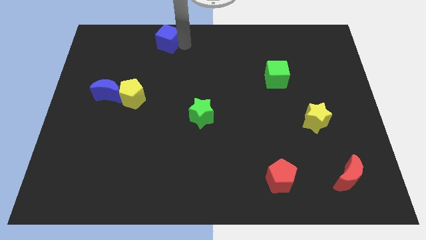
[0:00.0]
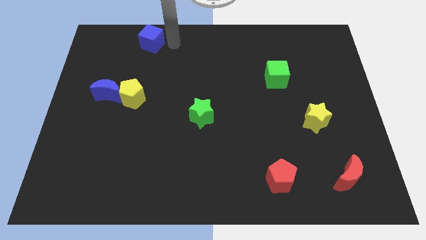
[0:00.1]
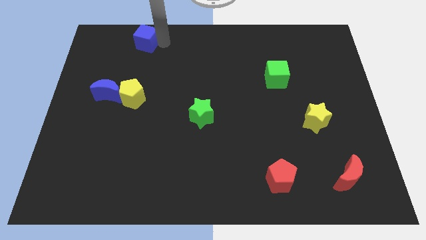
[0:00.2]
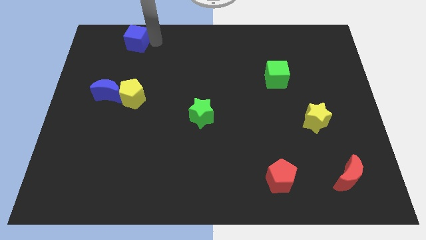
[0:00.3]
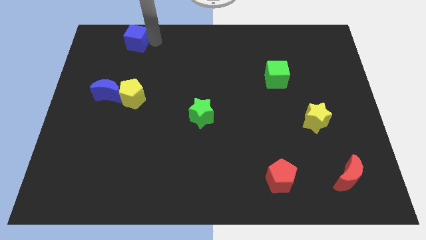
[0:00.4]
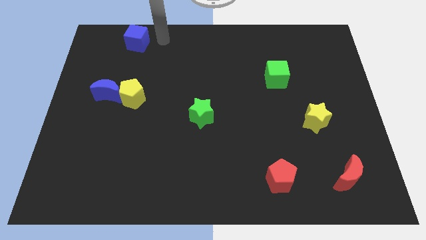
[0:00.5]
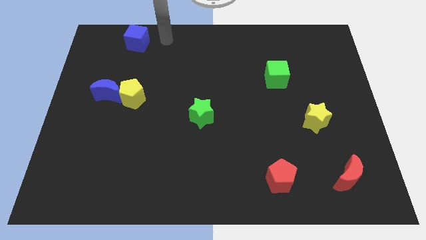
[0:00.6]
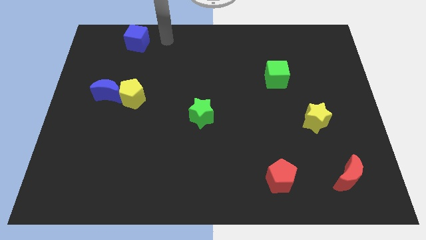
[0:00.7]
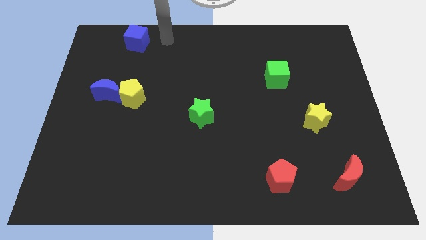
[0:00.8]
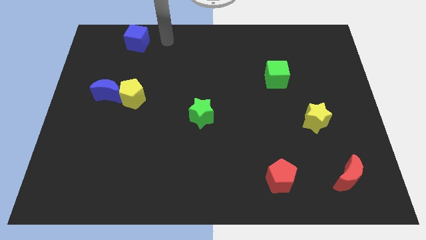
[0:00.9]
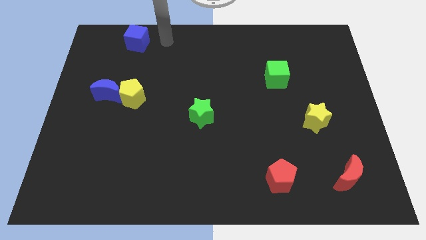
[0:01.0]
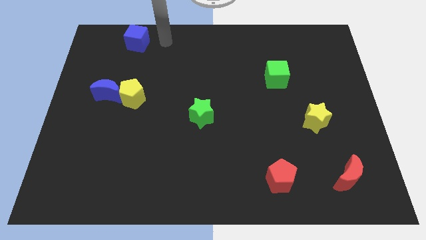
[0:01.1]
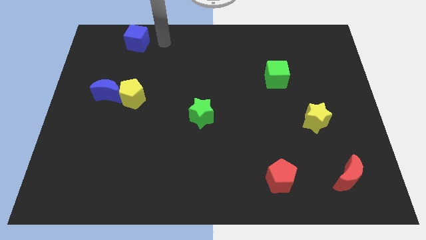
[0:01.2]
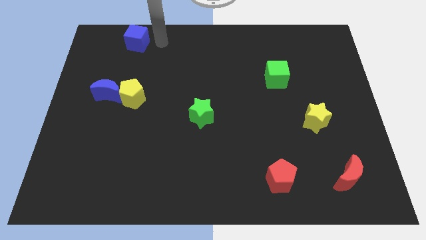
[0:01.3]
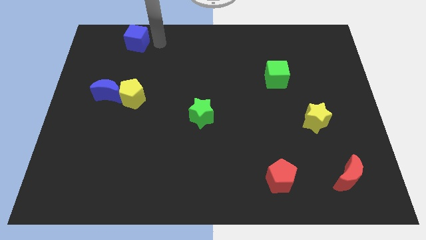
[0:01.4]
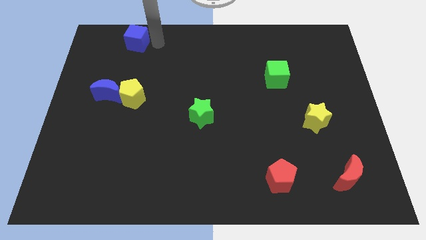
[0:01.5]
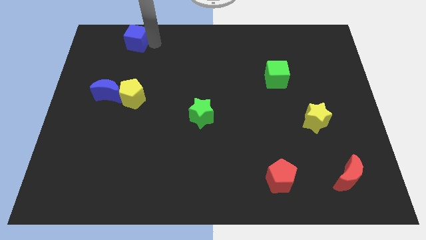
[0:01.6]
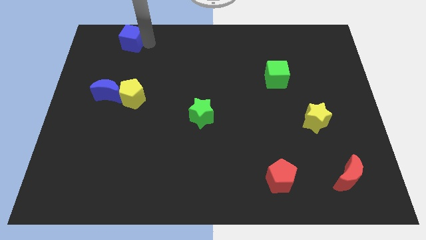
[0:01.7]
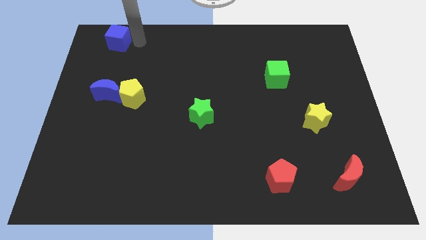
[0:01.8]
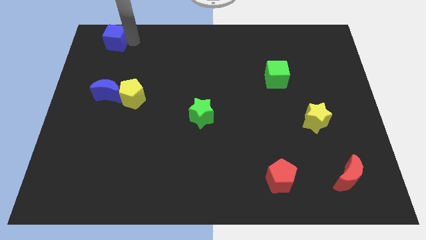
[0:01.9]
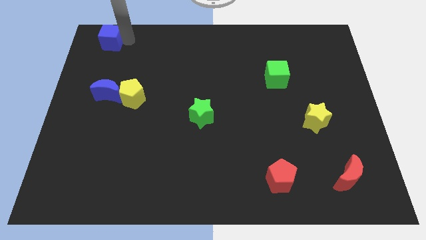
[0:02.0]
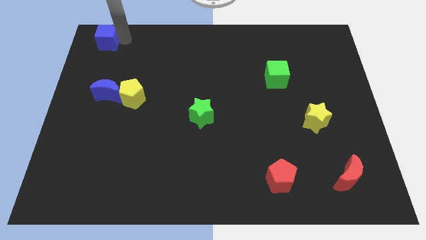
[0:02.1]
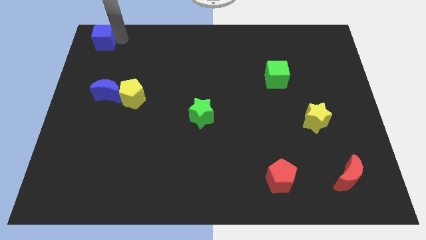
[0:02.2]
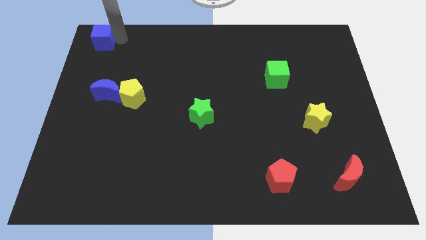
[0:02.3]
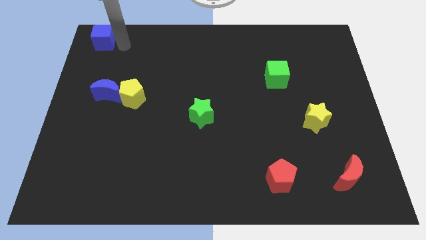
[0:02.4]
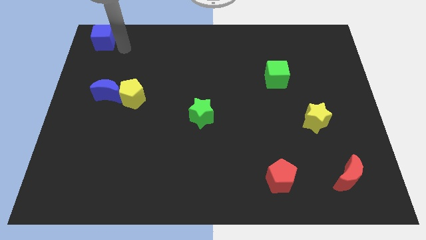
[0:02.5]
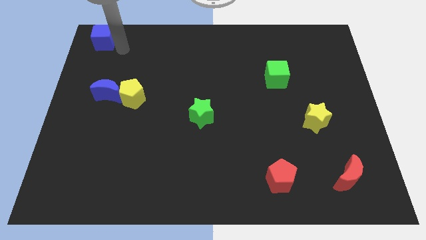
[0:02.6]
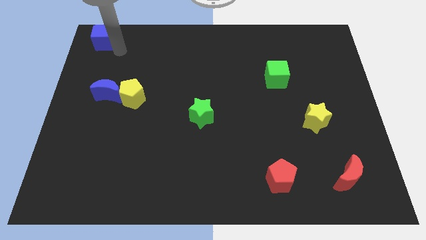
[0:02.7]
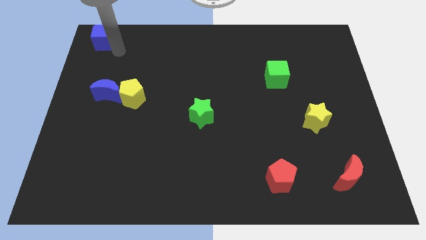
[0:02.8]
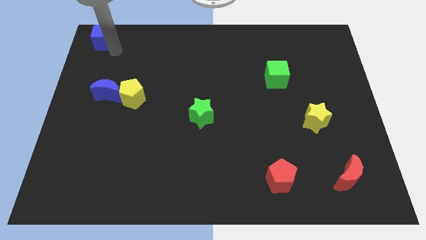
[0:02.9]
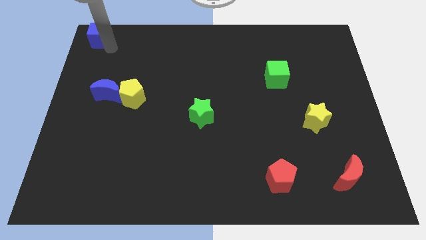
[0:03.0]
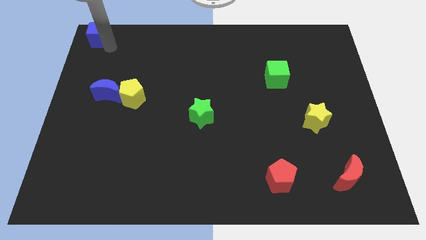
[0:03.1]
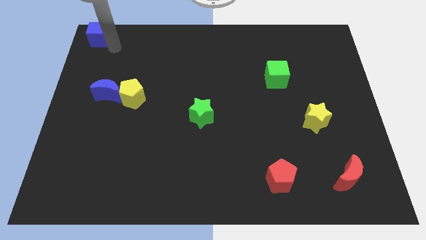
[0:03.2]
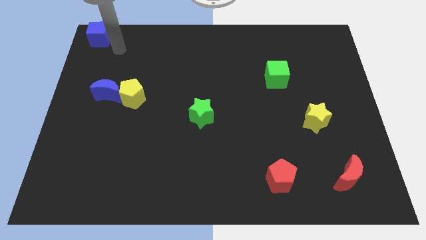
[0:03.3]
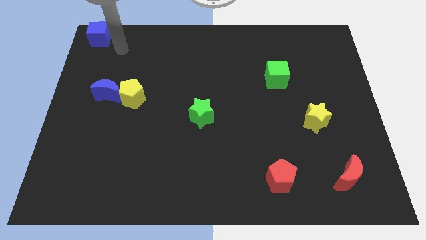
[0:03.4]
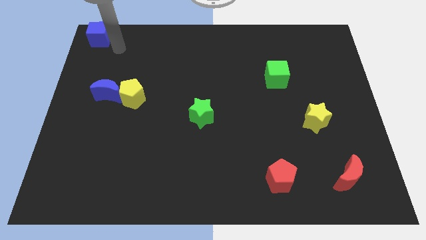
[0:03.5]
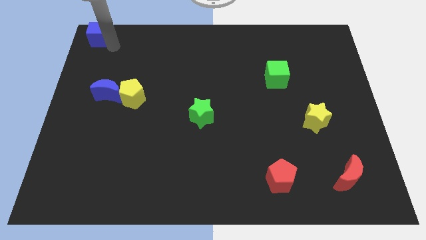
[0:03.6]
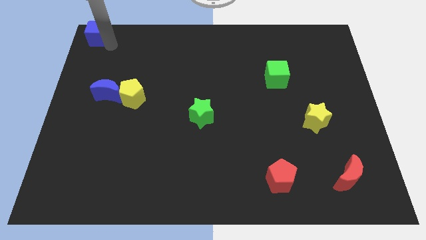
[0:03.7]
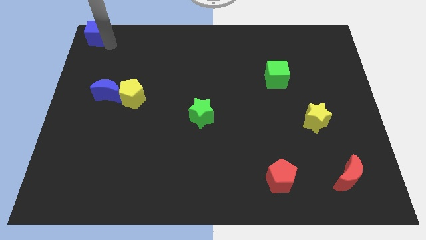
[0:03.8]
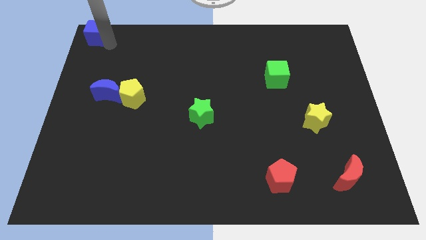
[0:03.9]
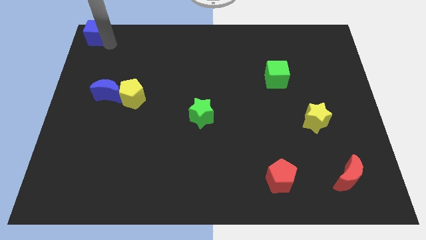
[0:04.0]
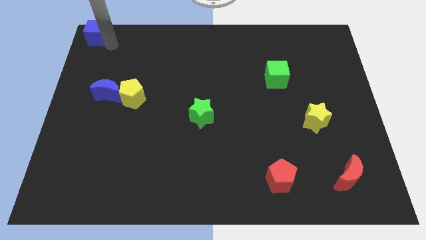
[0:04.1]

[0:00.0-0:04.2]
move the blue cube to the top left corner of the board

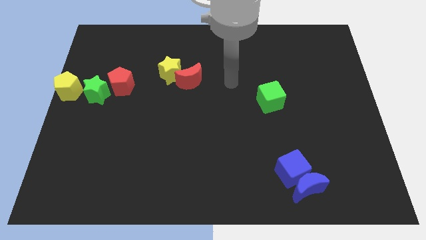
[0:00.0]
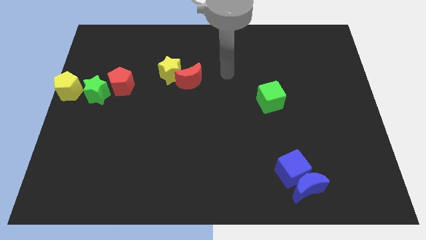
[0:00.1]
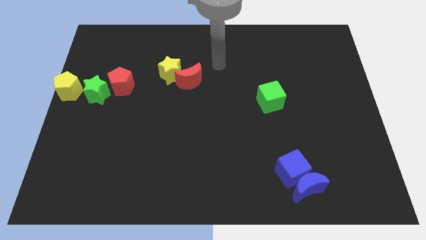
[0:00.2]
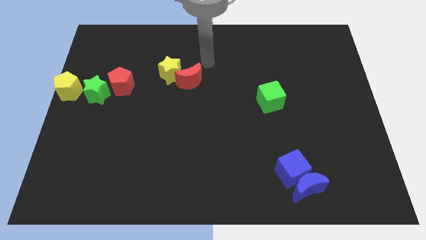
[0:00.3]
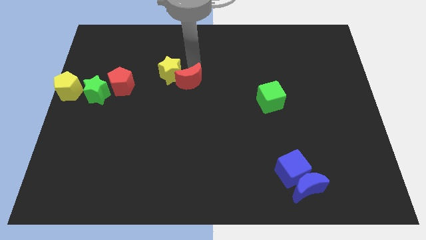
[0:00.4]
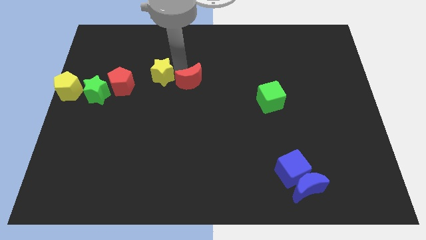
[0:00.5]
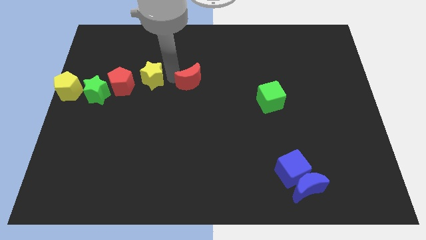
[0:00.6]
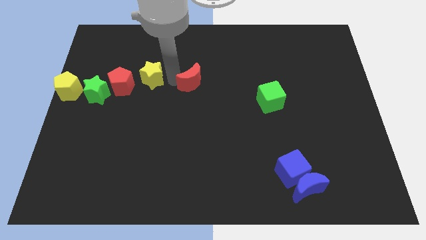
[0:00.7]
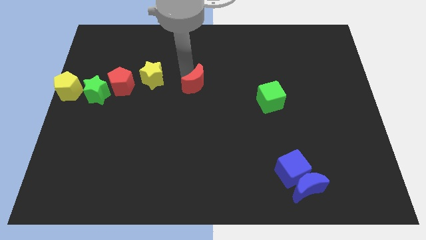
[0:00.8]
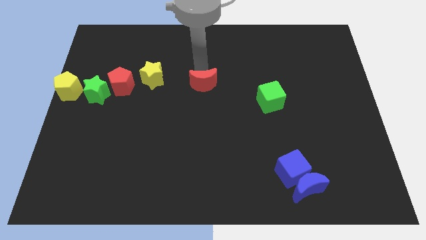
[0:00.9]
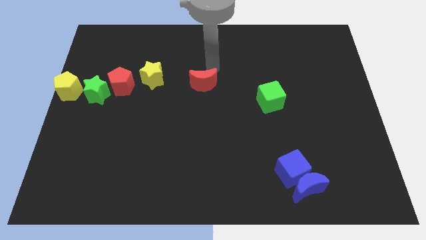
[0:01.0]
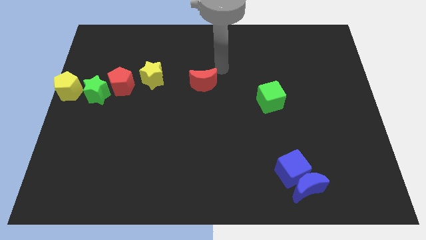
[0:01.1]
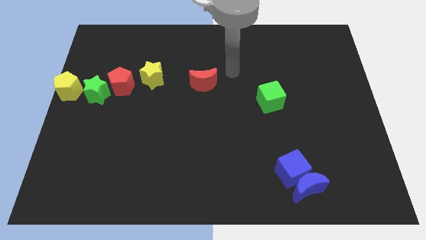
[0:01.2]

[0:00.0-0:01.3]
separate the red crescent and yellow star

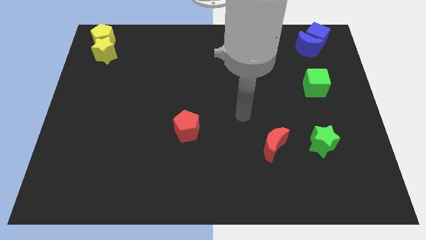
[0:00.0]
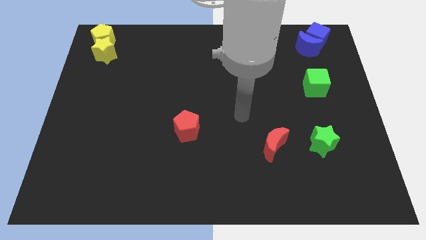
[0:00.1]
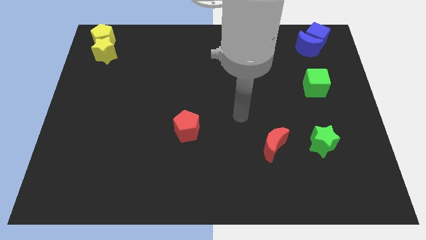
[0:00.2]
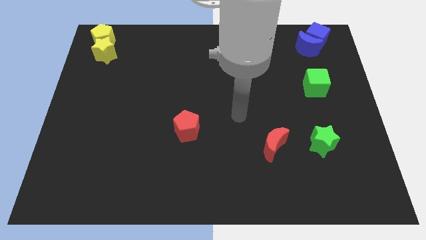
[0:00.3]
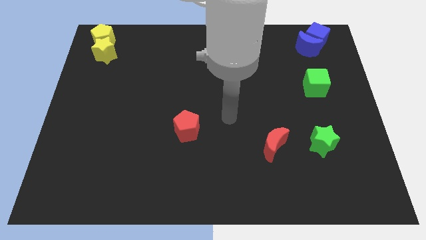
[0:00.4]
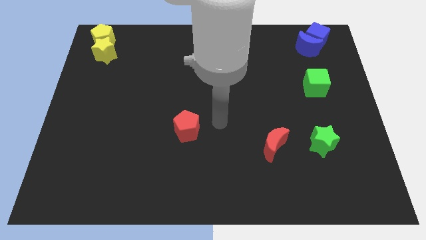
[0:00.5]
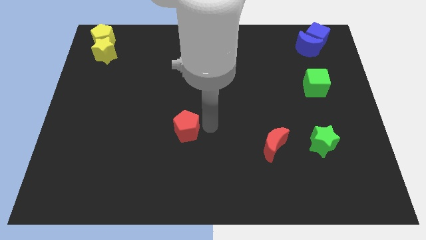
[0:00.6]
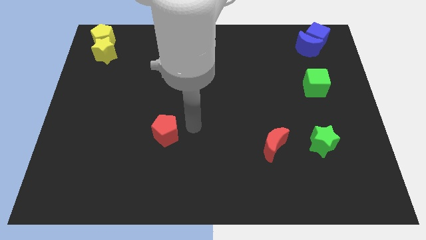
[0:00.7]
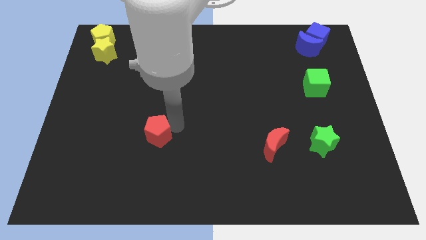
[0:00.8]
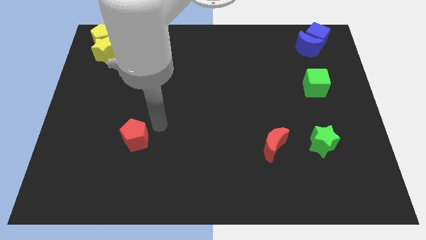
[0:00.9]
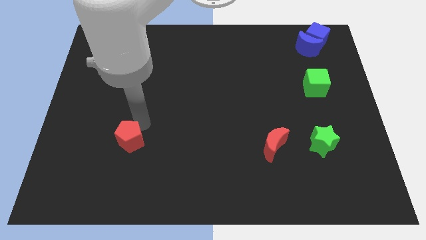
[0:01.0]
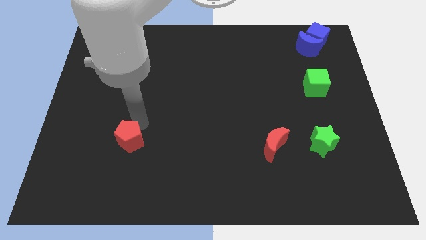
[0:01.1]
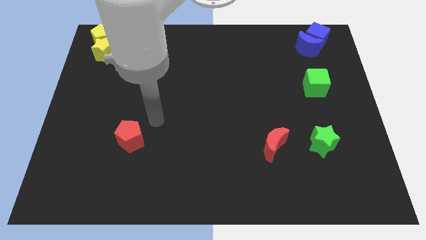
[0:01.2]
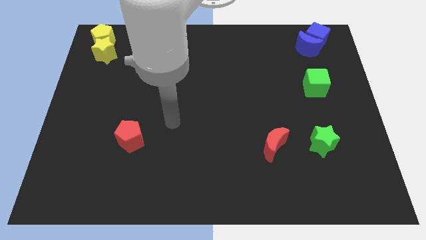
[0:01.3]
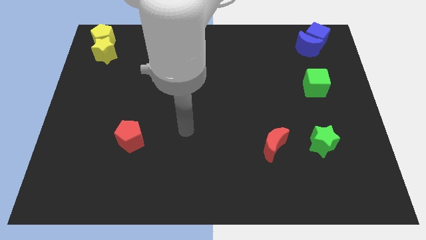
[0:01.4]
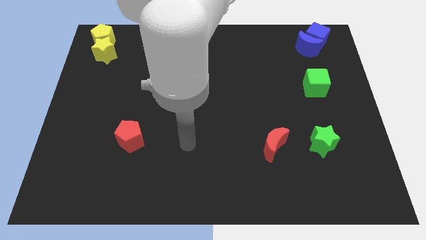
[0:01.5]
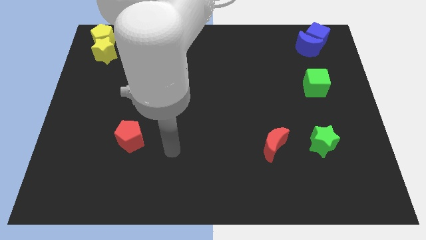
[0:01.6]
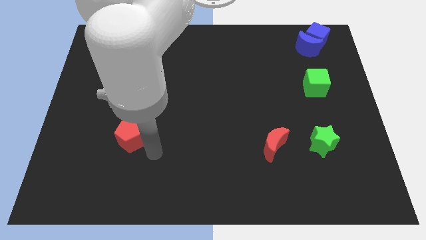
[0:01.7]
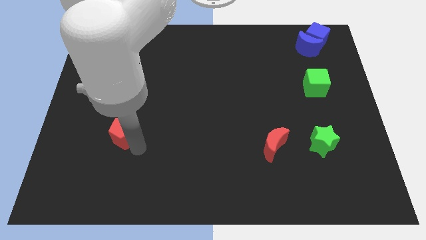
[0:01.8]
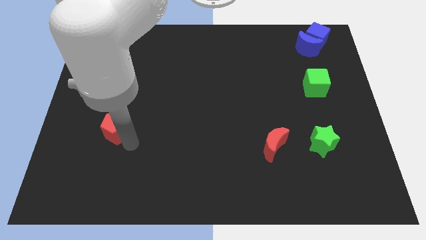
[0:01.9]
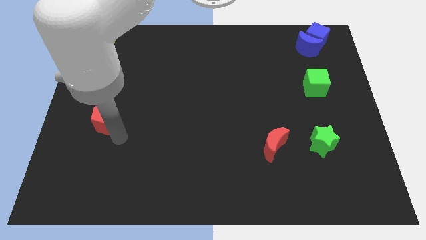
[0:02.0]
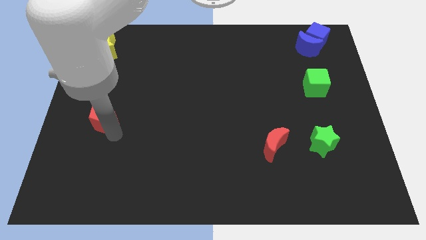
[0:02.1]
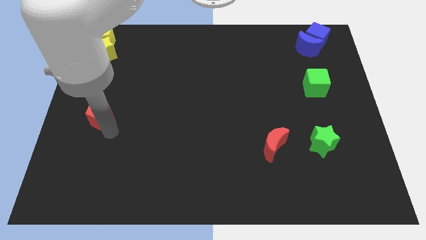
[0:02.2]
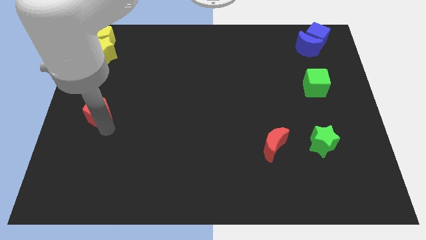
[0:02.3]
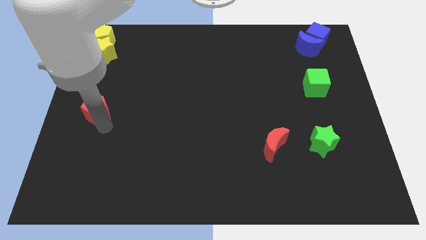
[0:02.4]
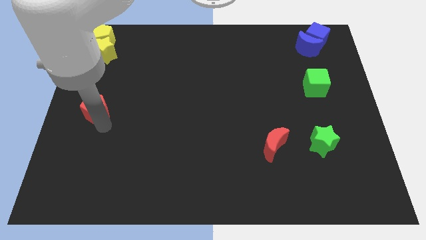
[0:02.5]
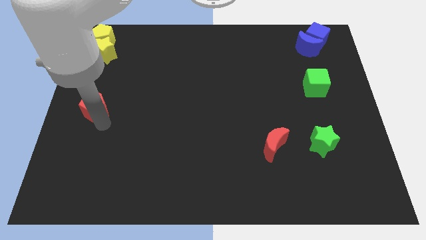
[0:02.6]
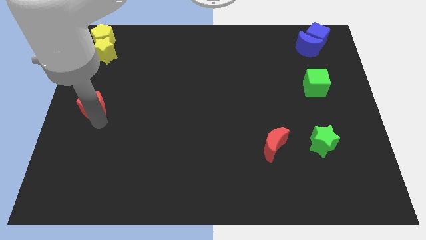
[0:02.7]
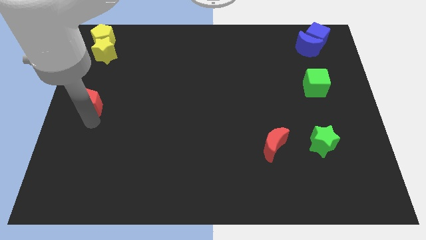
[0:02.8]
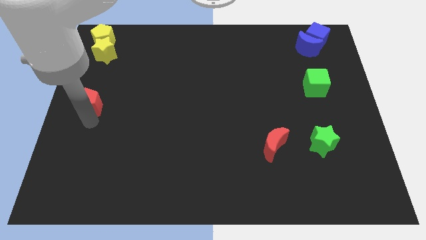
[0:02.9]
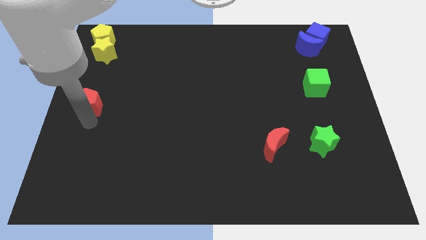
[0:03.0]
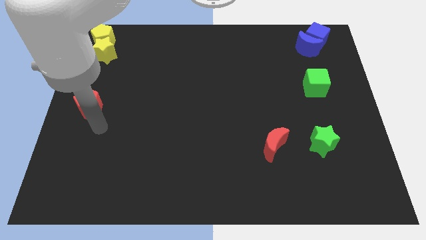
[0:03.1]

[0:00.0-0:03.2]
move red pentagon to the center left

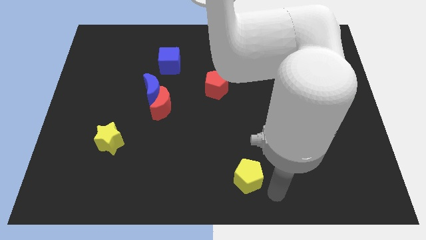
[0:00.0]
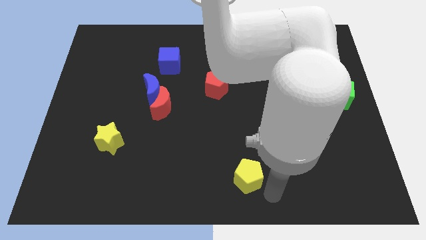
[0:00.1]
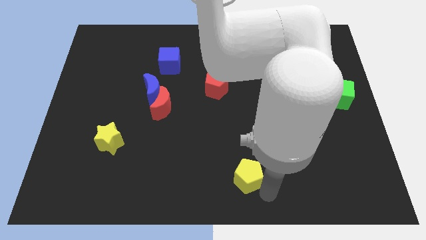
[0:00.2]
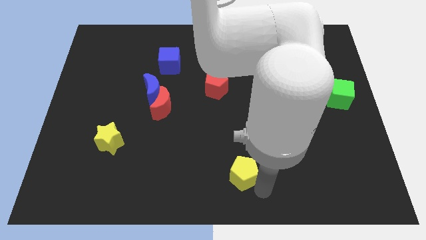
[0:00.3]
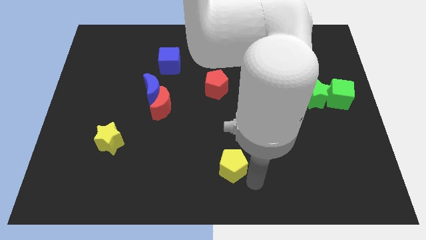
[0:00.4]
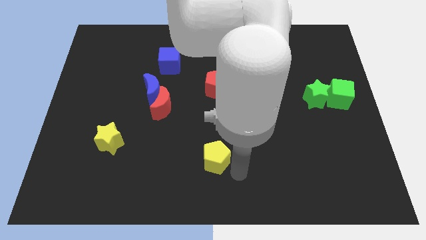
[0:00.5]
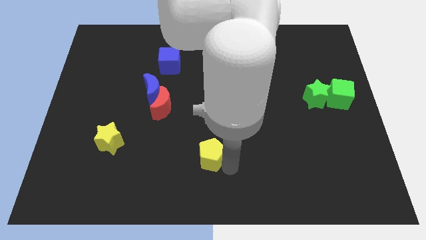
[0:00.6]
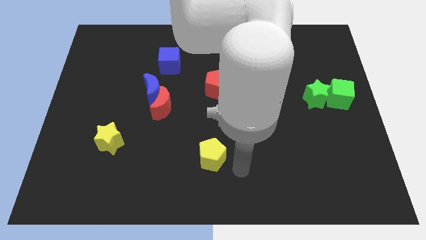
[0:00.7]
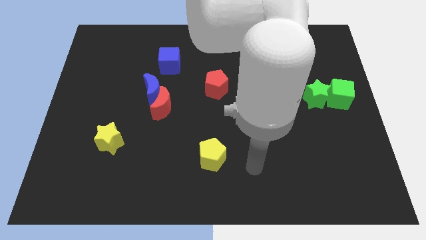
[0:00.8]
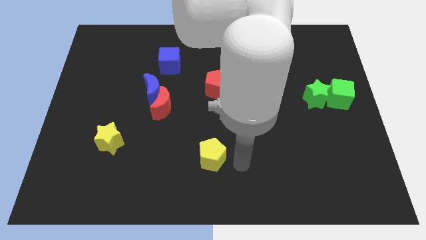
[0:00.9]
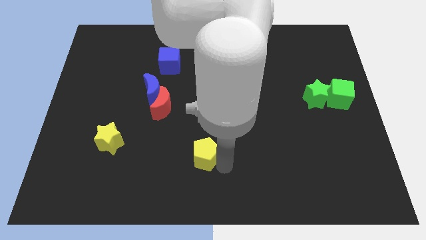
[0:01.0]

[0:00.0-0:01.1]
push the yellow pentagon to the top of the board
